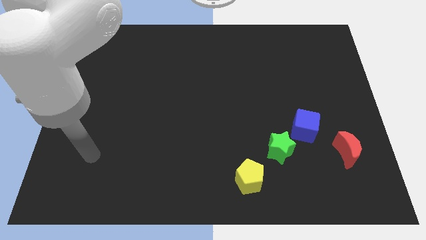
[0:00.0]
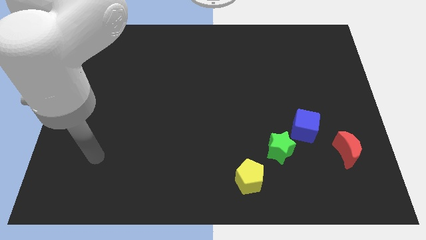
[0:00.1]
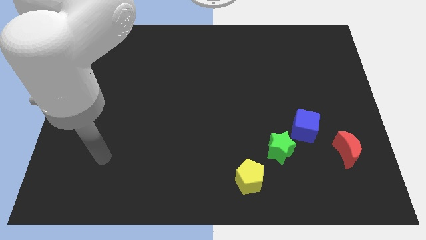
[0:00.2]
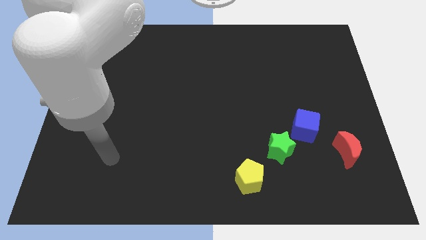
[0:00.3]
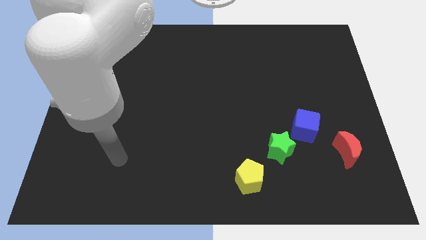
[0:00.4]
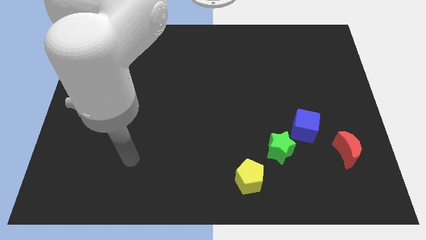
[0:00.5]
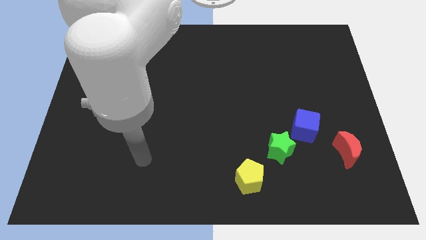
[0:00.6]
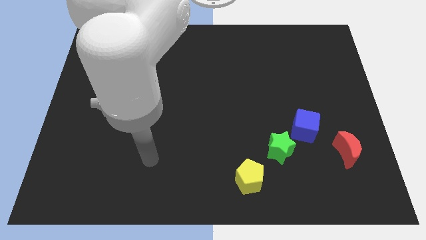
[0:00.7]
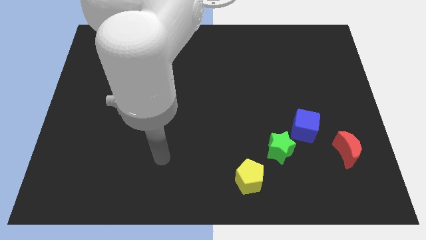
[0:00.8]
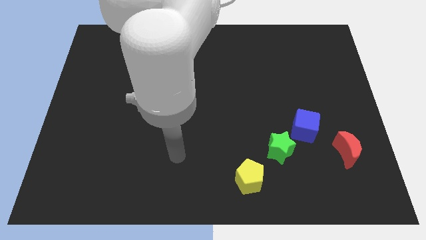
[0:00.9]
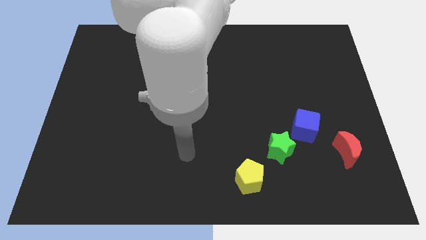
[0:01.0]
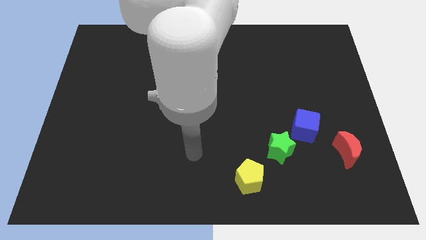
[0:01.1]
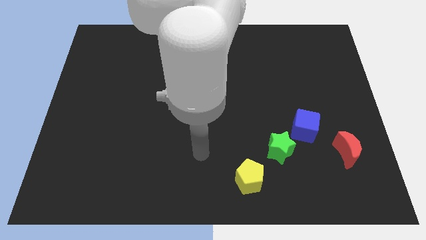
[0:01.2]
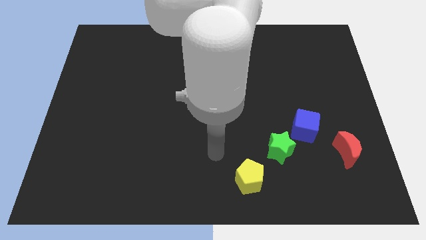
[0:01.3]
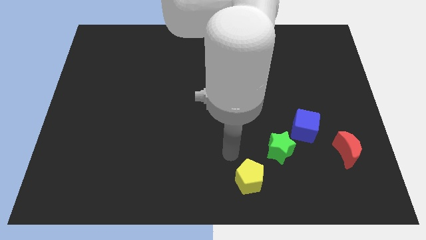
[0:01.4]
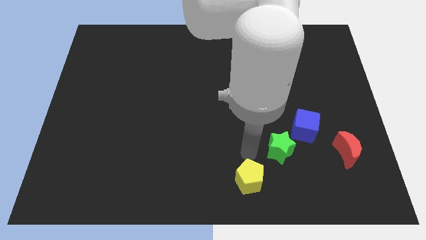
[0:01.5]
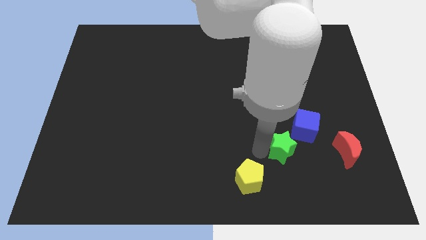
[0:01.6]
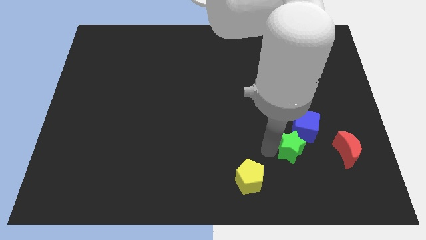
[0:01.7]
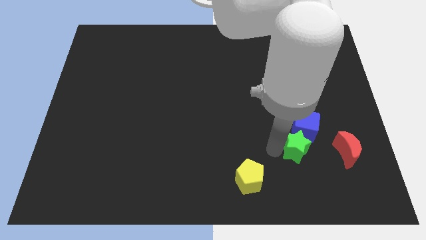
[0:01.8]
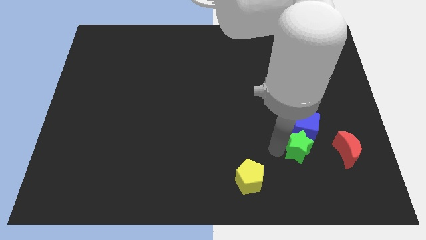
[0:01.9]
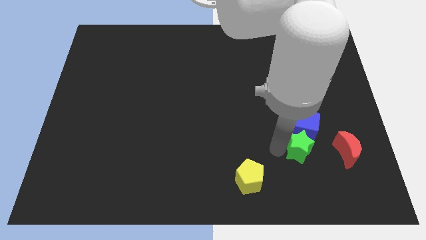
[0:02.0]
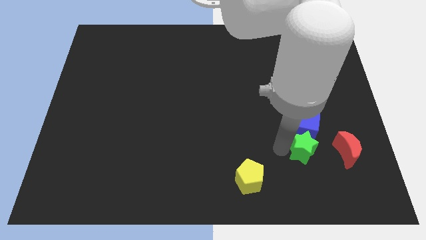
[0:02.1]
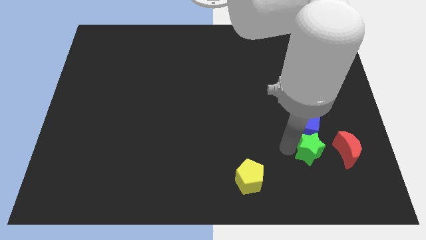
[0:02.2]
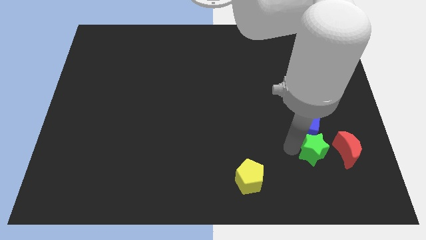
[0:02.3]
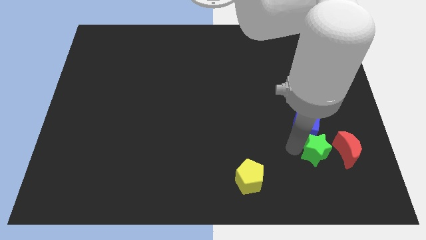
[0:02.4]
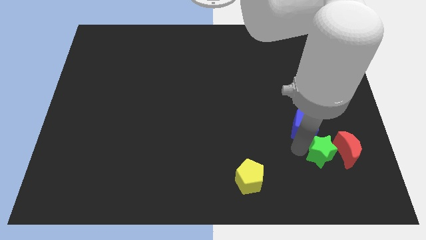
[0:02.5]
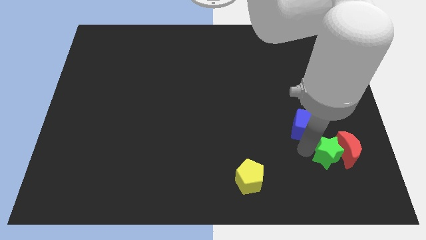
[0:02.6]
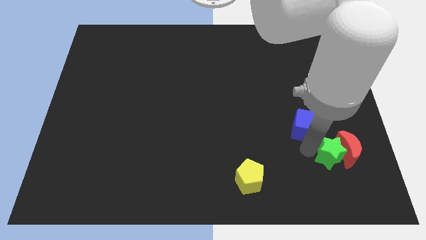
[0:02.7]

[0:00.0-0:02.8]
slide the green block close to the red moon

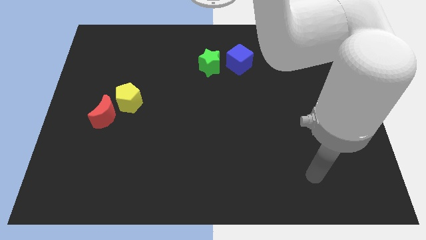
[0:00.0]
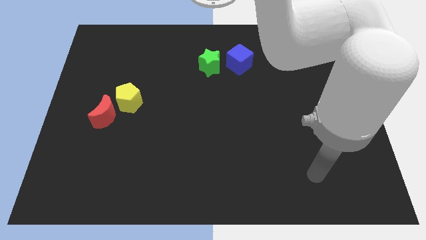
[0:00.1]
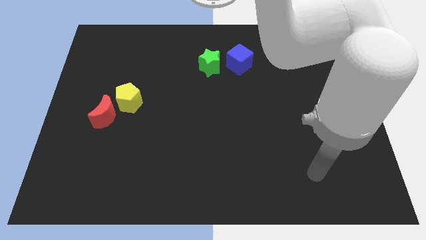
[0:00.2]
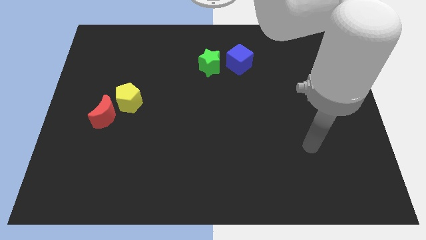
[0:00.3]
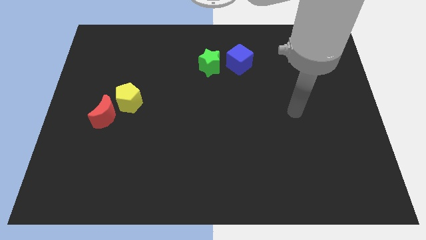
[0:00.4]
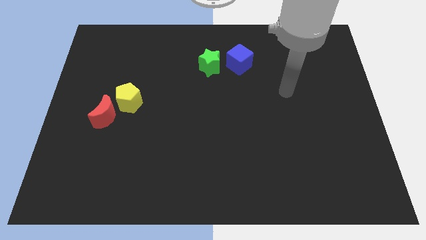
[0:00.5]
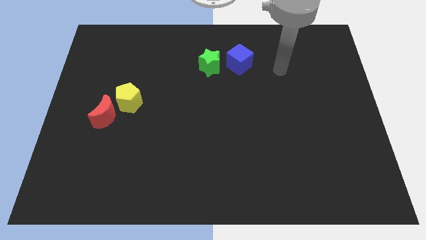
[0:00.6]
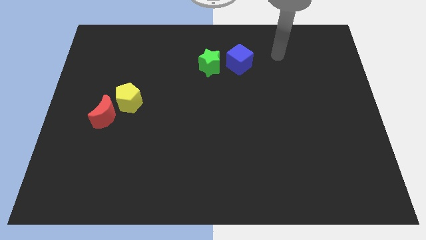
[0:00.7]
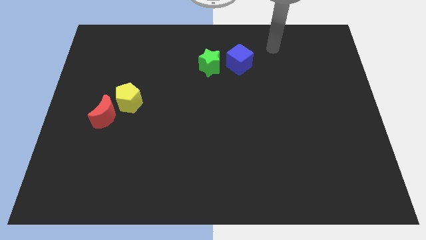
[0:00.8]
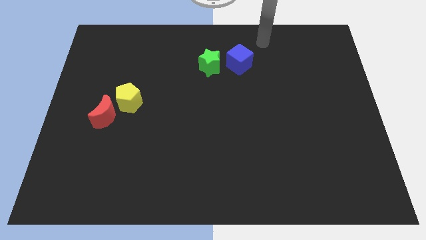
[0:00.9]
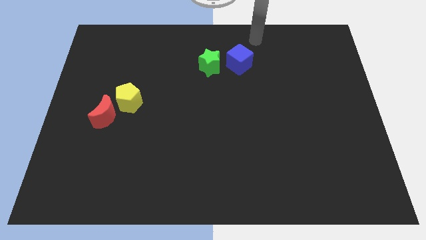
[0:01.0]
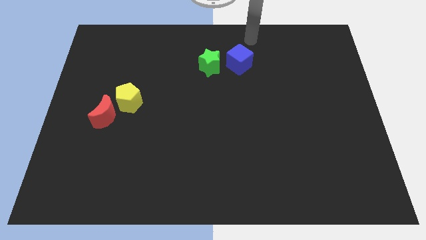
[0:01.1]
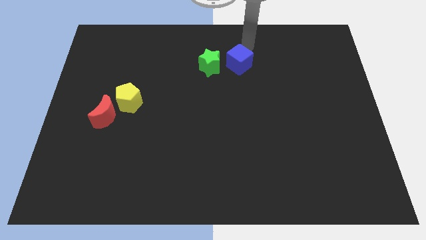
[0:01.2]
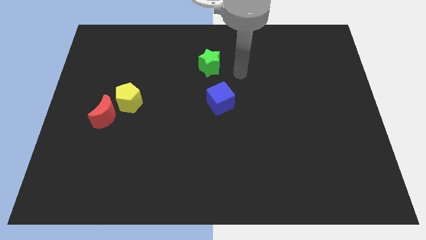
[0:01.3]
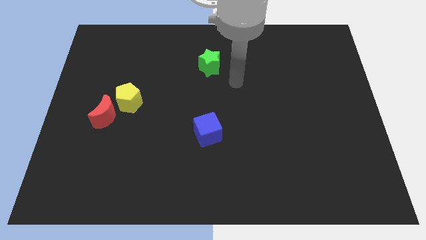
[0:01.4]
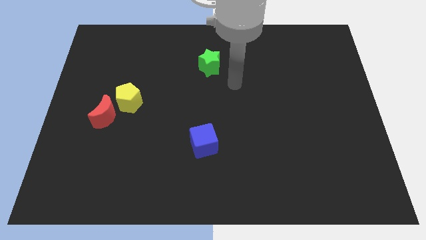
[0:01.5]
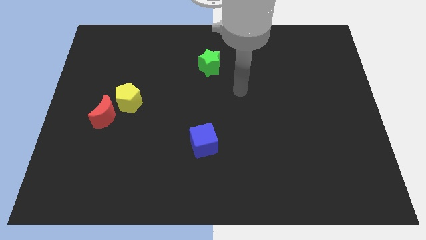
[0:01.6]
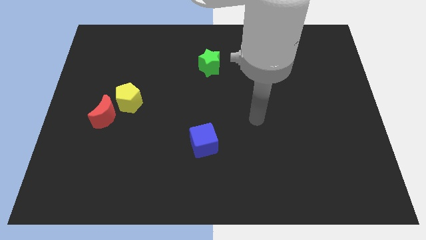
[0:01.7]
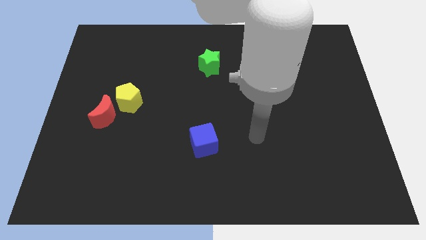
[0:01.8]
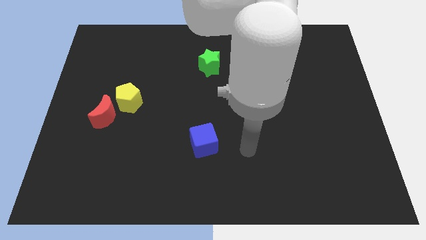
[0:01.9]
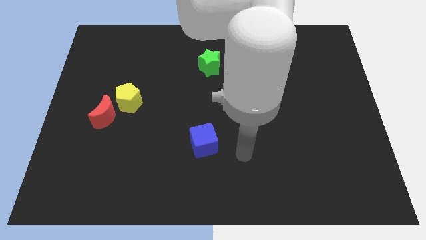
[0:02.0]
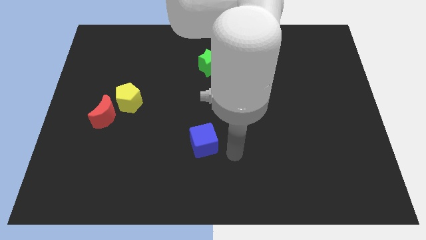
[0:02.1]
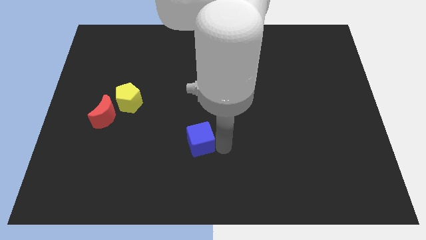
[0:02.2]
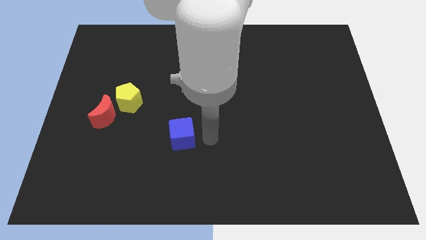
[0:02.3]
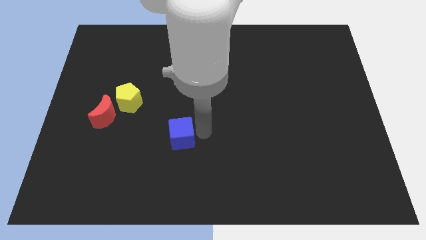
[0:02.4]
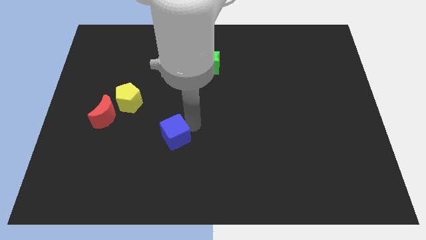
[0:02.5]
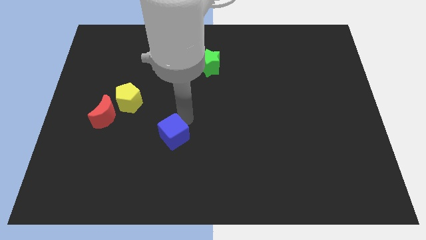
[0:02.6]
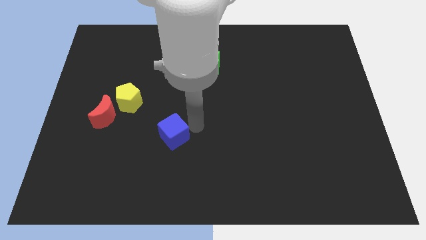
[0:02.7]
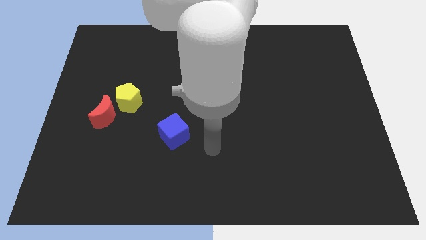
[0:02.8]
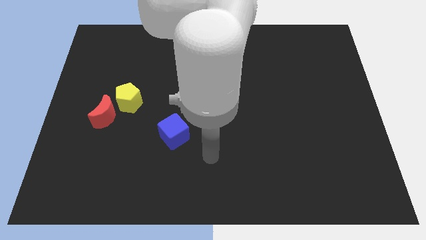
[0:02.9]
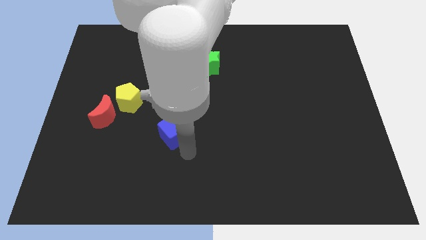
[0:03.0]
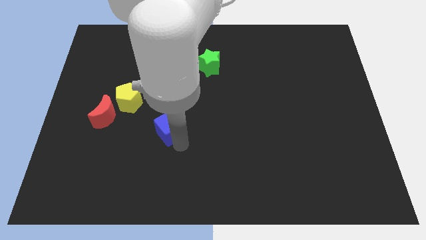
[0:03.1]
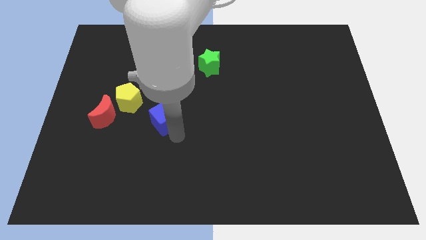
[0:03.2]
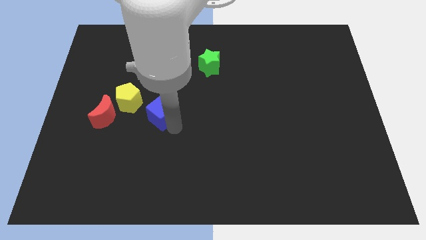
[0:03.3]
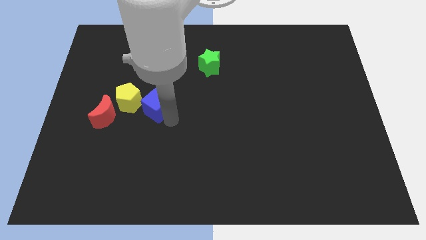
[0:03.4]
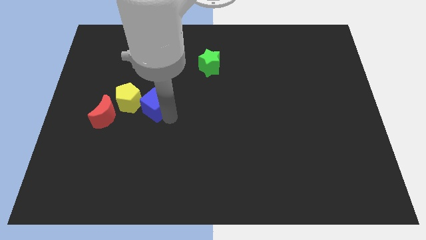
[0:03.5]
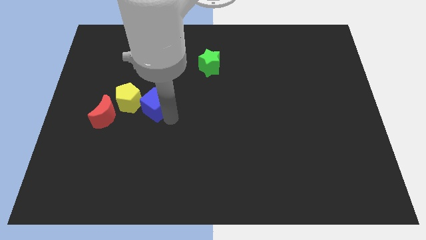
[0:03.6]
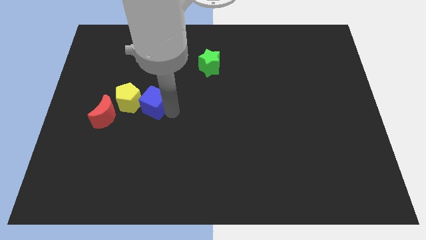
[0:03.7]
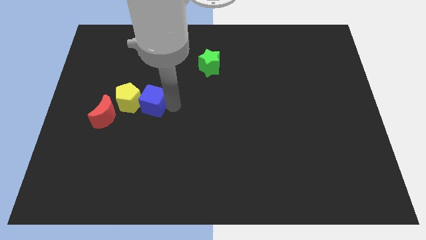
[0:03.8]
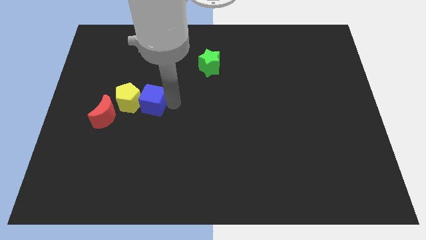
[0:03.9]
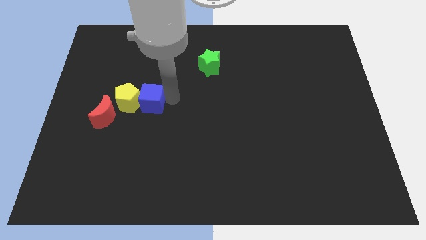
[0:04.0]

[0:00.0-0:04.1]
move the blue block next to the yellow block

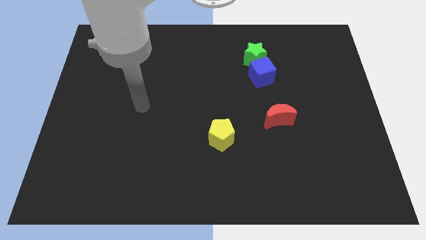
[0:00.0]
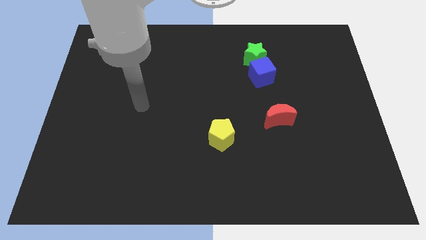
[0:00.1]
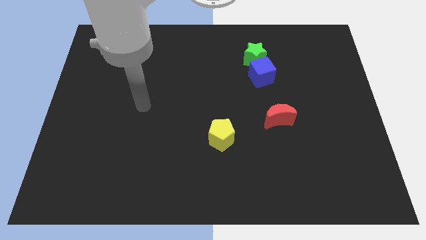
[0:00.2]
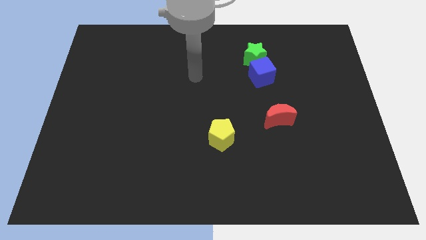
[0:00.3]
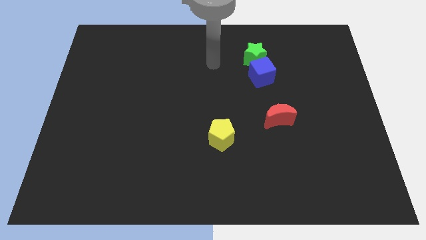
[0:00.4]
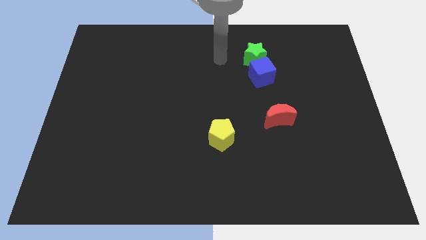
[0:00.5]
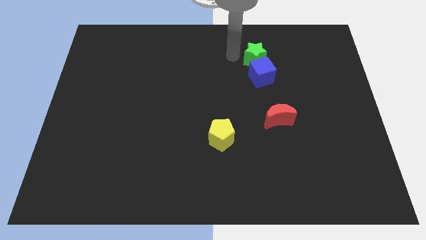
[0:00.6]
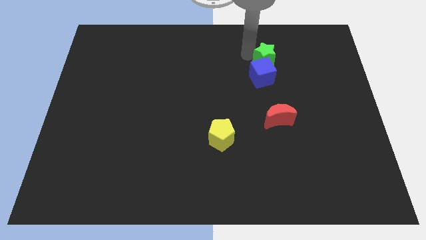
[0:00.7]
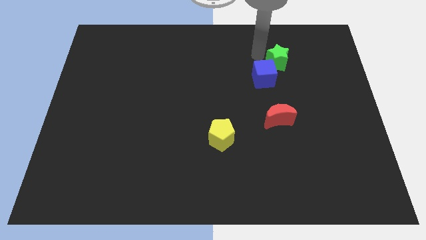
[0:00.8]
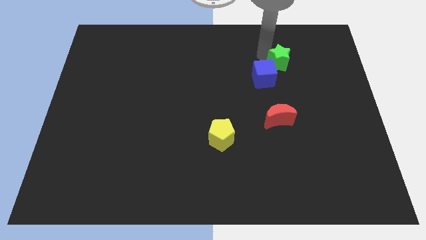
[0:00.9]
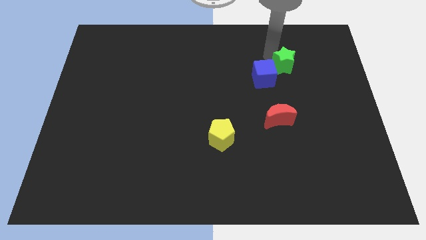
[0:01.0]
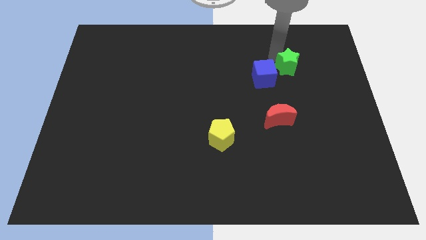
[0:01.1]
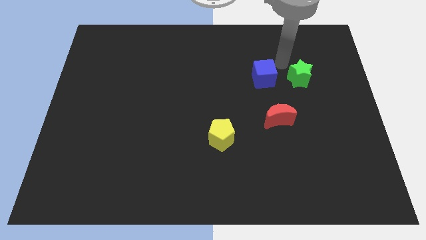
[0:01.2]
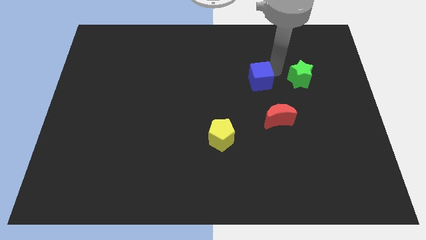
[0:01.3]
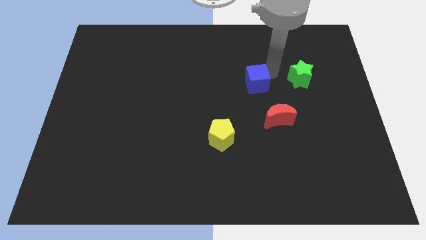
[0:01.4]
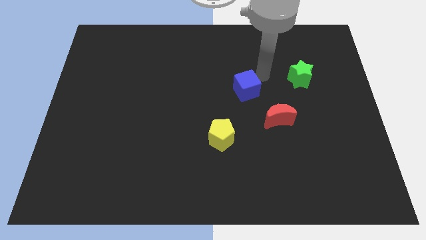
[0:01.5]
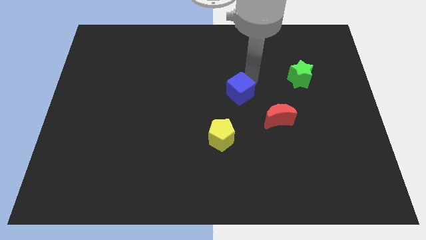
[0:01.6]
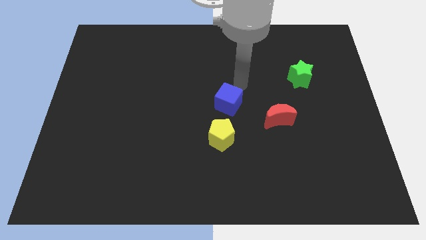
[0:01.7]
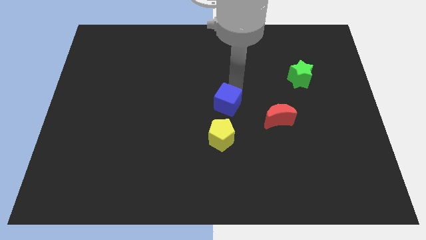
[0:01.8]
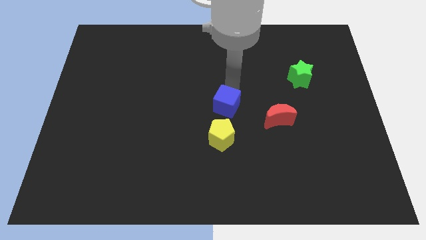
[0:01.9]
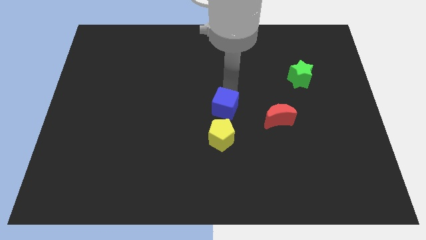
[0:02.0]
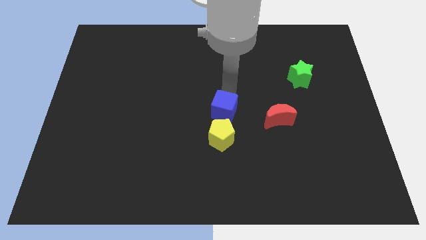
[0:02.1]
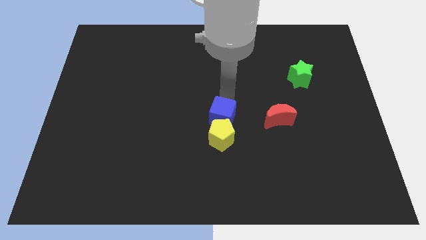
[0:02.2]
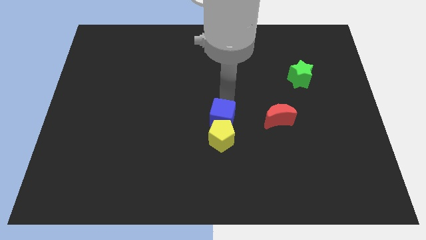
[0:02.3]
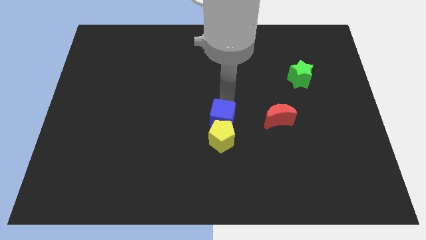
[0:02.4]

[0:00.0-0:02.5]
slide the cube close to the yellow block
